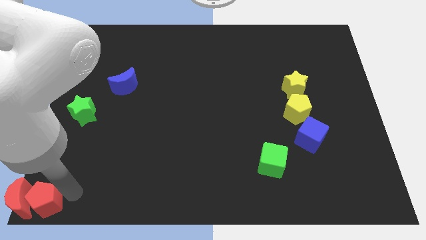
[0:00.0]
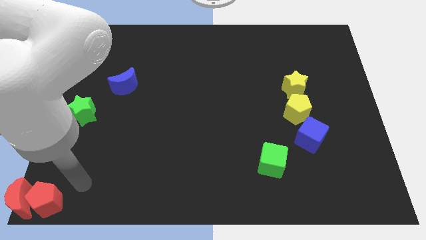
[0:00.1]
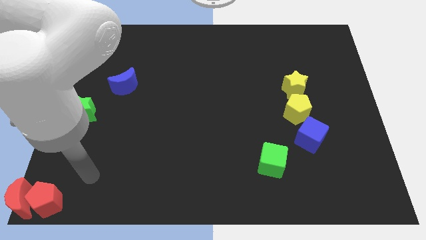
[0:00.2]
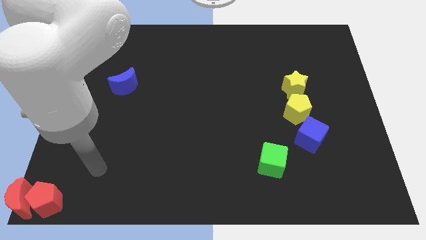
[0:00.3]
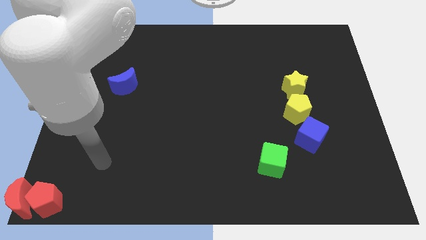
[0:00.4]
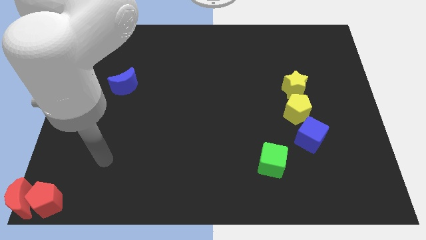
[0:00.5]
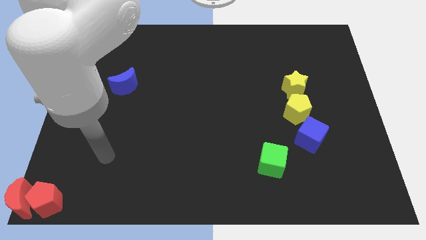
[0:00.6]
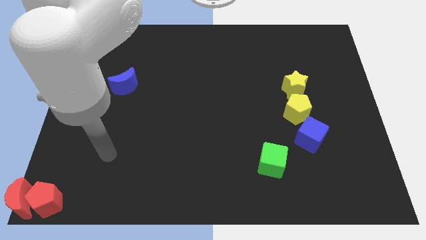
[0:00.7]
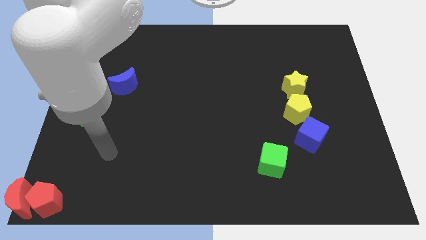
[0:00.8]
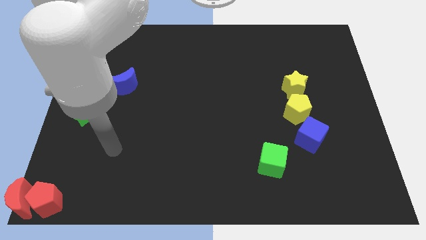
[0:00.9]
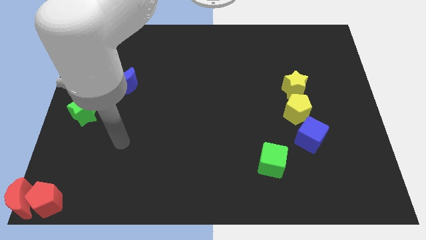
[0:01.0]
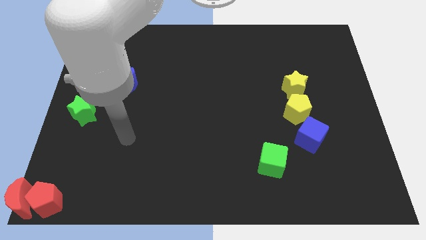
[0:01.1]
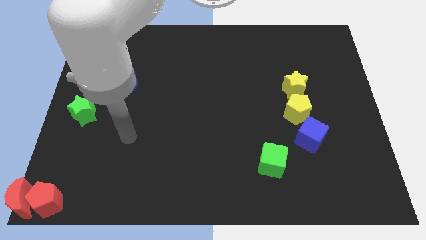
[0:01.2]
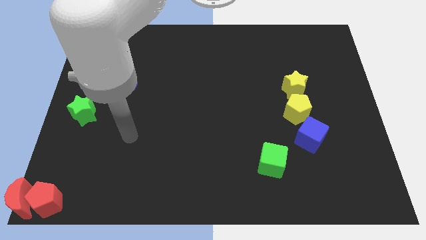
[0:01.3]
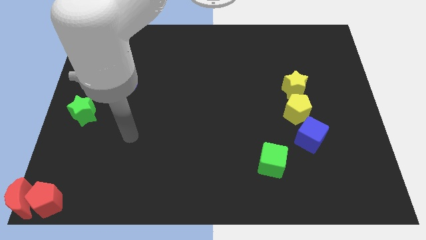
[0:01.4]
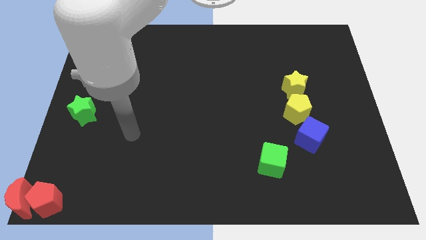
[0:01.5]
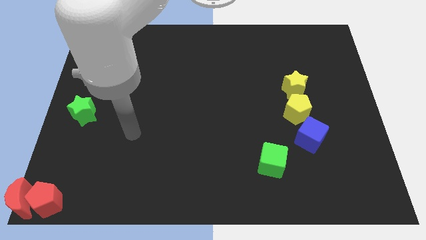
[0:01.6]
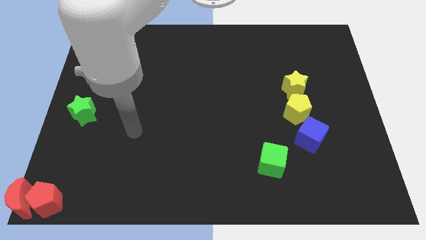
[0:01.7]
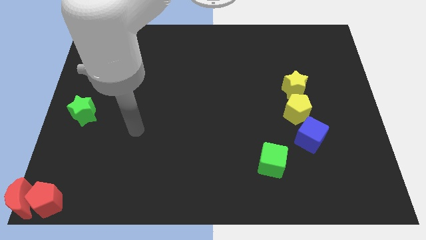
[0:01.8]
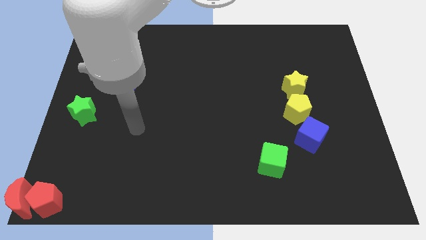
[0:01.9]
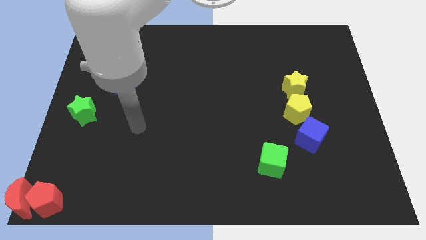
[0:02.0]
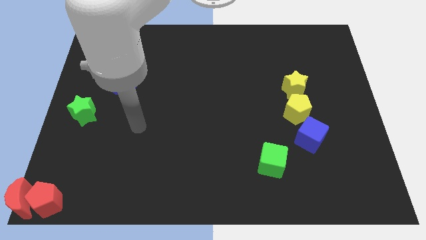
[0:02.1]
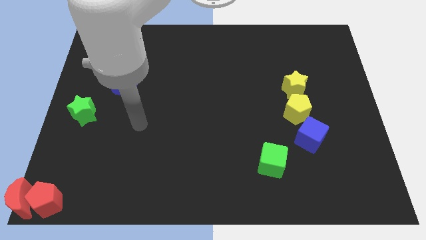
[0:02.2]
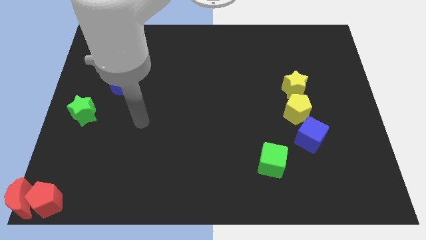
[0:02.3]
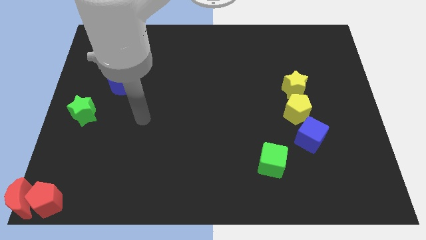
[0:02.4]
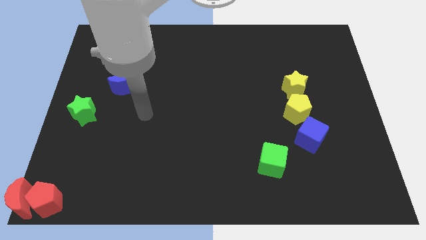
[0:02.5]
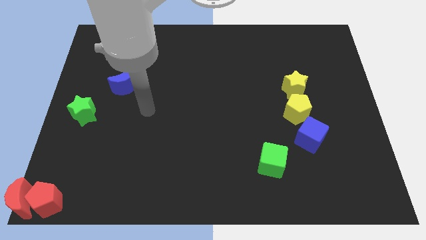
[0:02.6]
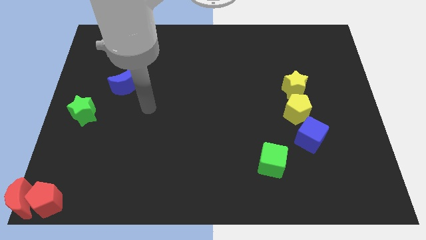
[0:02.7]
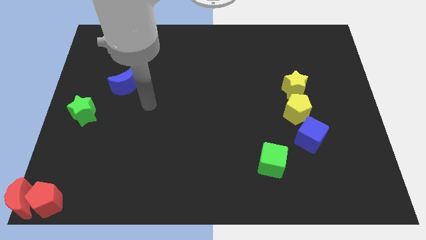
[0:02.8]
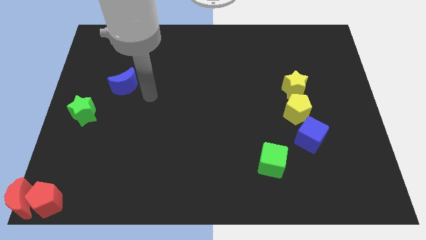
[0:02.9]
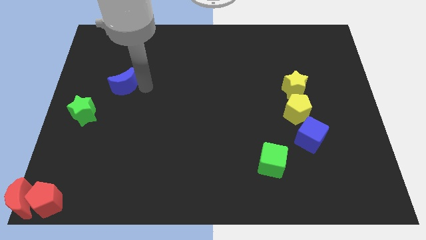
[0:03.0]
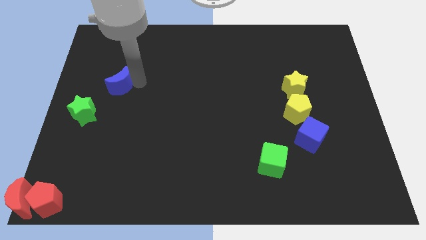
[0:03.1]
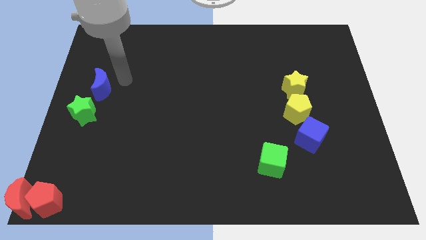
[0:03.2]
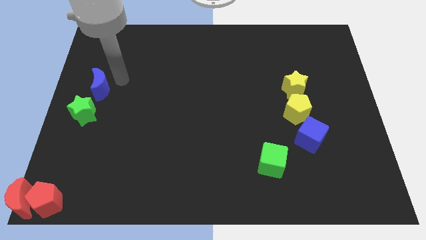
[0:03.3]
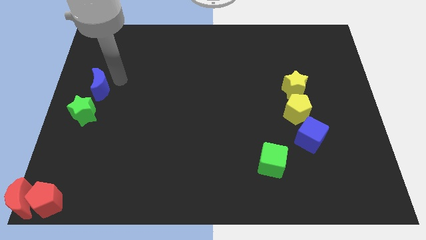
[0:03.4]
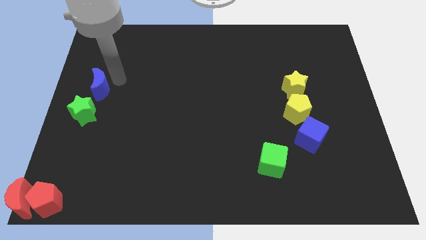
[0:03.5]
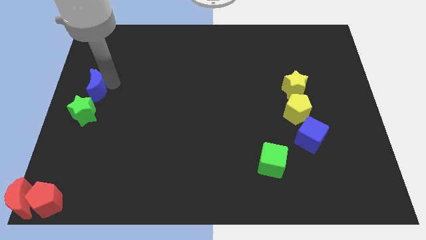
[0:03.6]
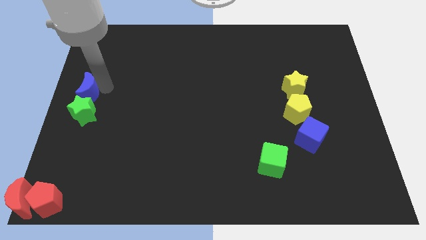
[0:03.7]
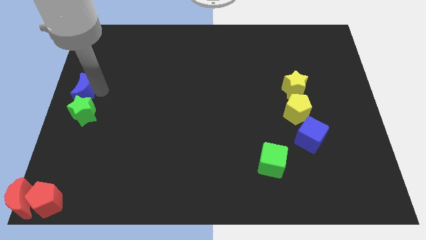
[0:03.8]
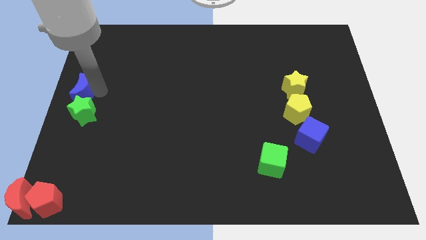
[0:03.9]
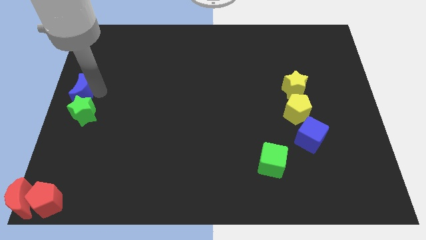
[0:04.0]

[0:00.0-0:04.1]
push the blue moon towards left center of board

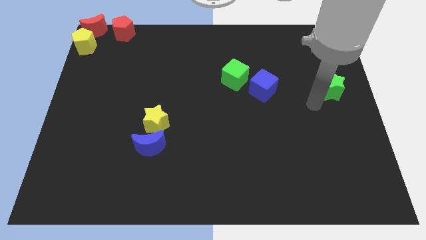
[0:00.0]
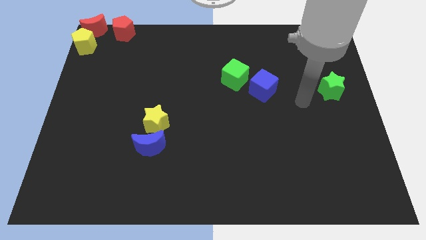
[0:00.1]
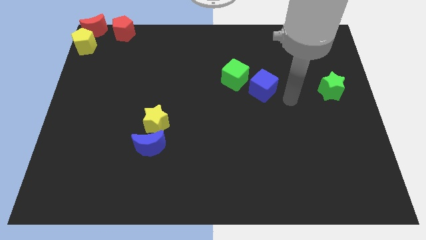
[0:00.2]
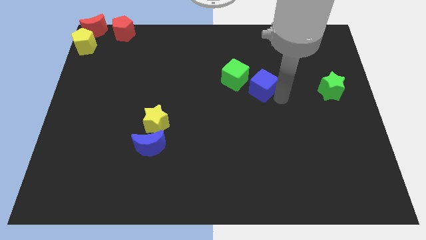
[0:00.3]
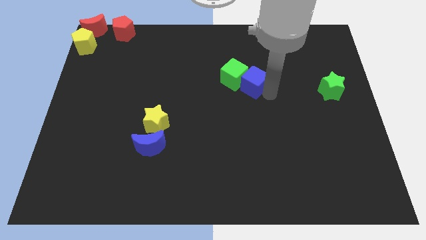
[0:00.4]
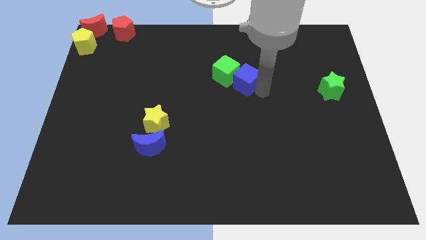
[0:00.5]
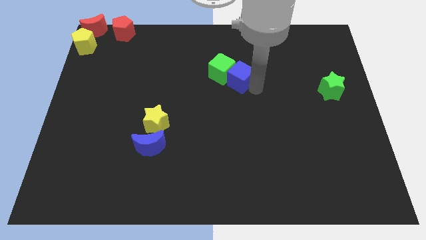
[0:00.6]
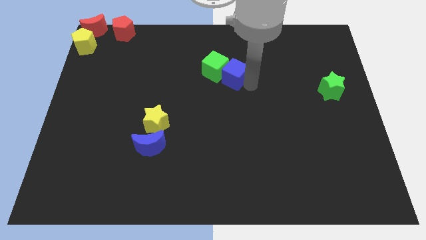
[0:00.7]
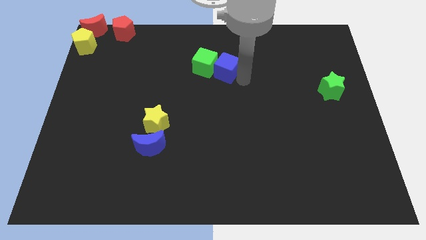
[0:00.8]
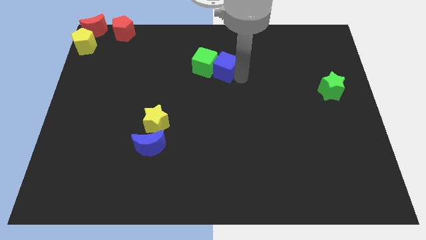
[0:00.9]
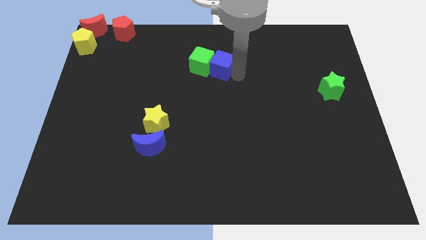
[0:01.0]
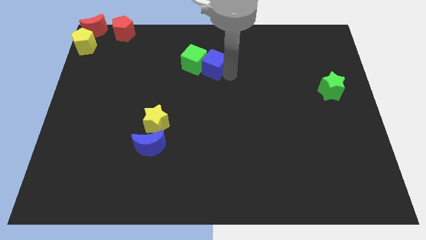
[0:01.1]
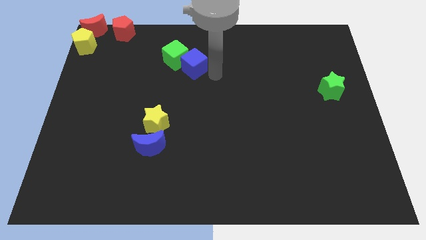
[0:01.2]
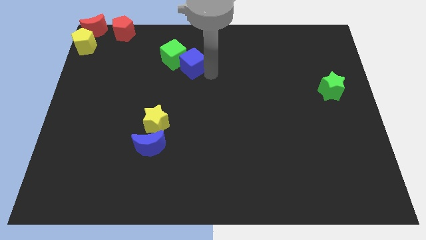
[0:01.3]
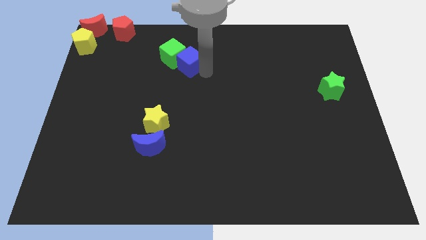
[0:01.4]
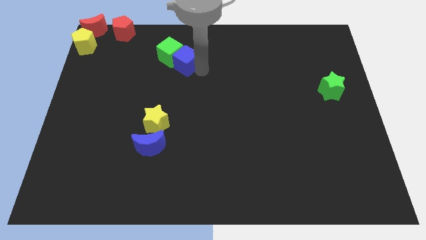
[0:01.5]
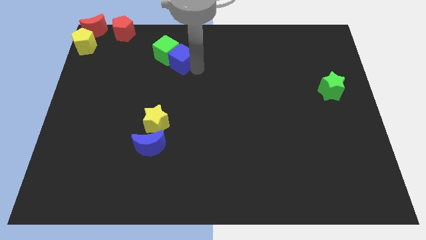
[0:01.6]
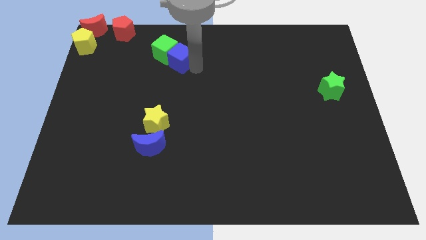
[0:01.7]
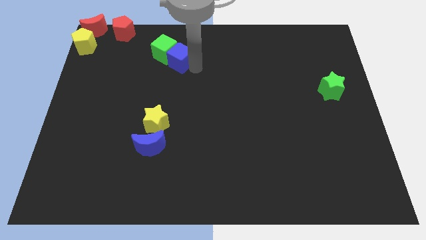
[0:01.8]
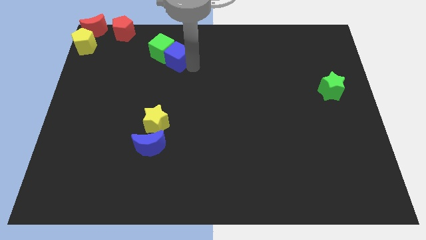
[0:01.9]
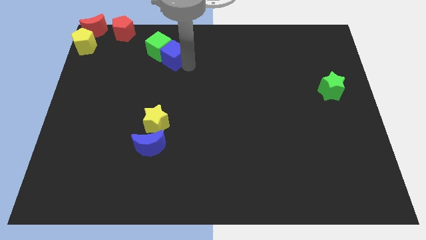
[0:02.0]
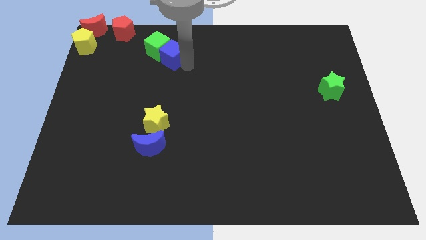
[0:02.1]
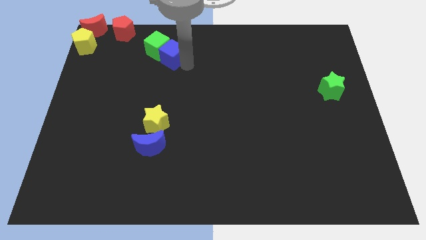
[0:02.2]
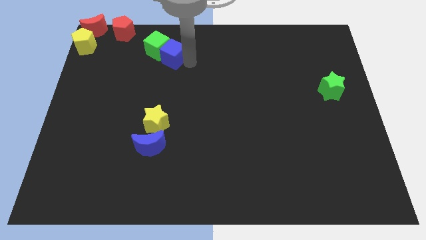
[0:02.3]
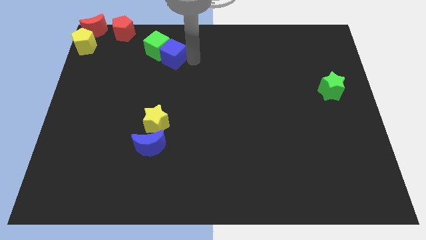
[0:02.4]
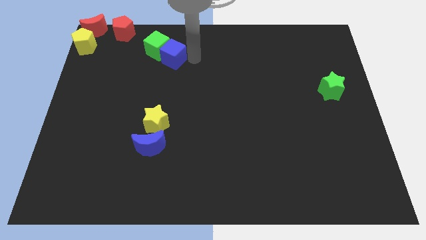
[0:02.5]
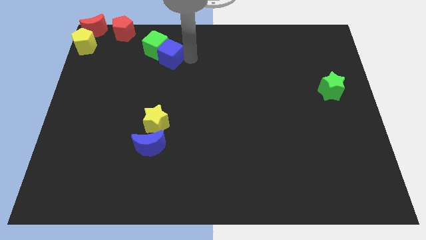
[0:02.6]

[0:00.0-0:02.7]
push the green cube and the blue cube to the left top

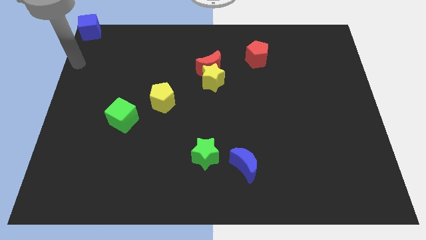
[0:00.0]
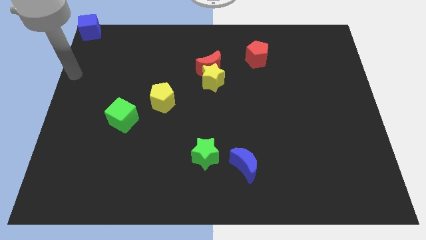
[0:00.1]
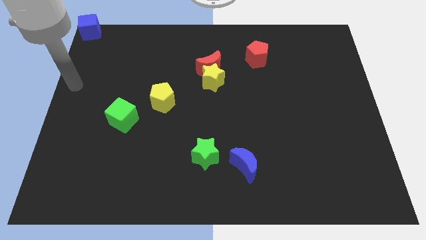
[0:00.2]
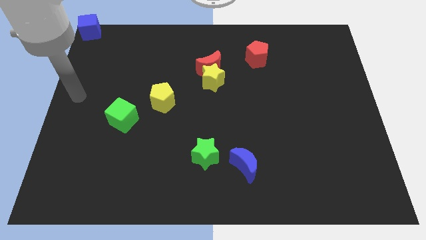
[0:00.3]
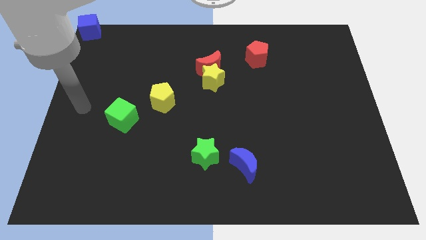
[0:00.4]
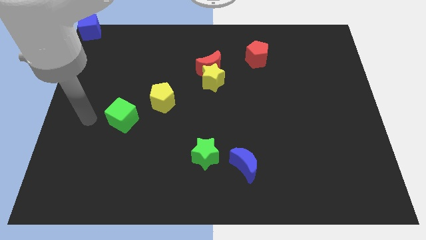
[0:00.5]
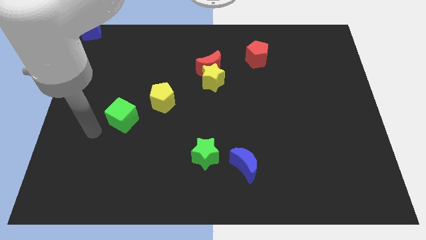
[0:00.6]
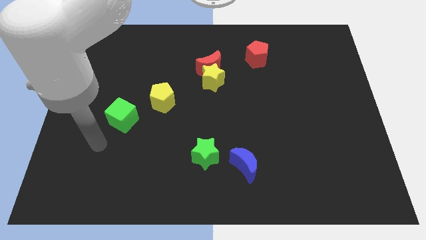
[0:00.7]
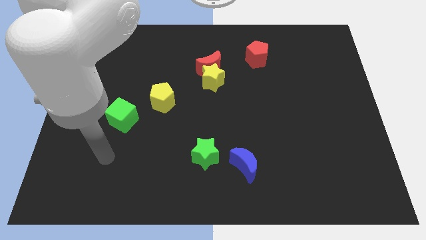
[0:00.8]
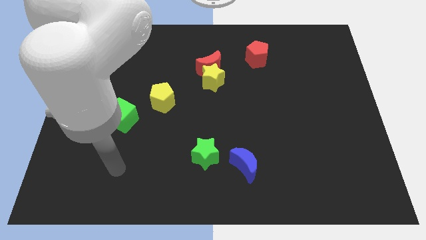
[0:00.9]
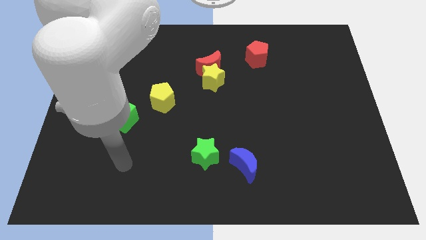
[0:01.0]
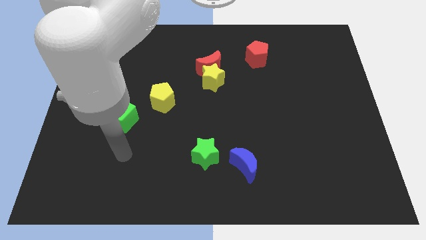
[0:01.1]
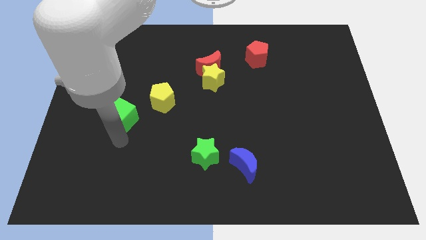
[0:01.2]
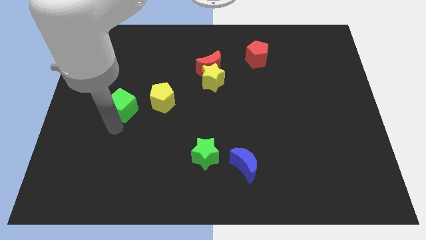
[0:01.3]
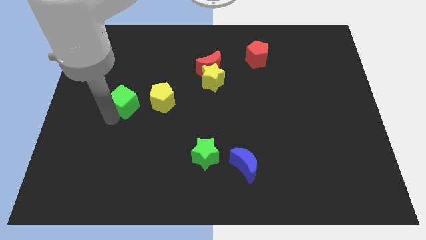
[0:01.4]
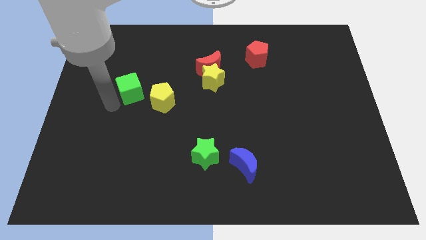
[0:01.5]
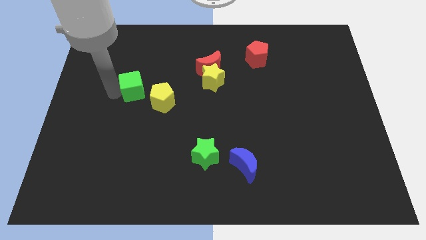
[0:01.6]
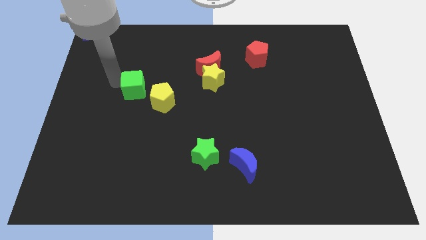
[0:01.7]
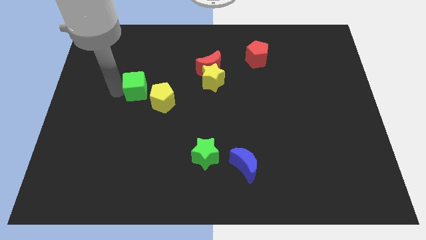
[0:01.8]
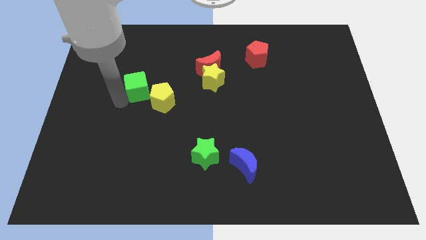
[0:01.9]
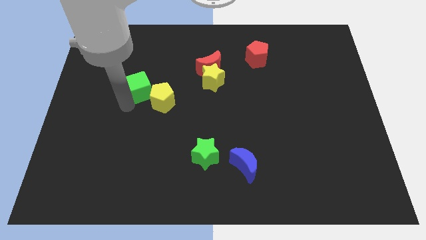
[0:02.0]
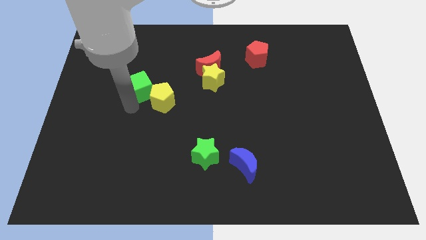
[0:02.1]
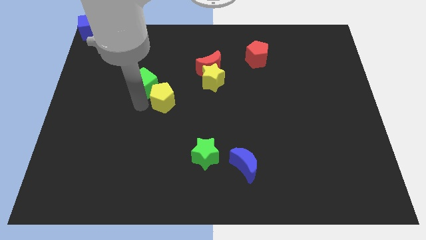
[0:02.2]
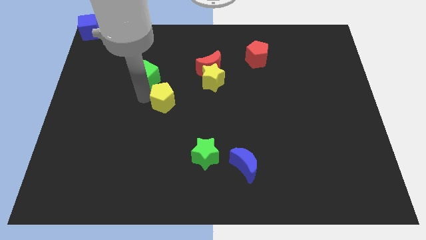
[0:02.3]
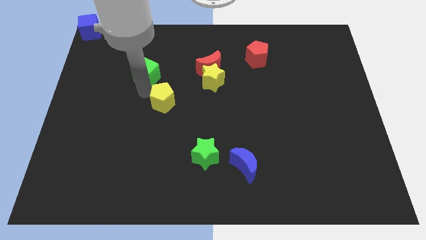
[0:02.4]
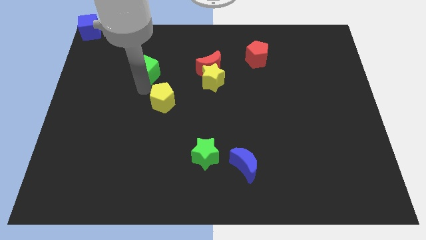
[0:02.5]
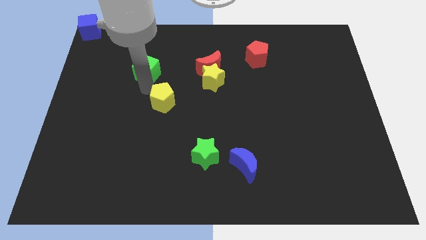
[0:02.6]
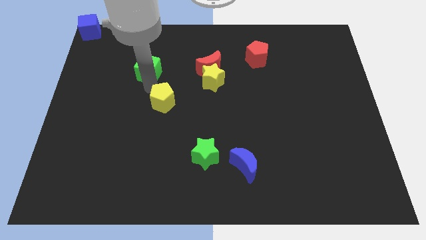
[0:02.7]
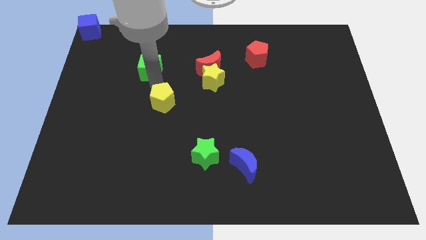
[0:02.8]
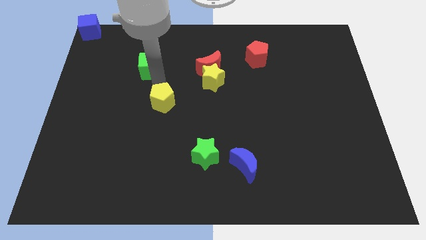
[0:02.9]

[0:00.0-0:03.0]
place the green cube above the yellow pentagon
